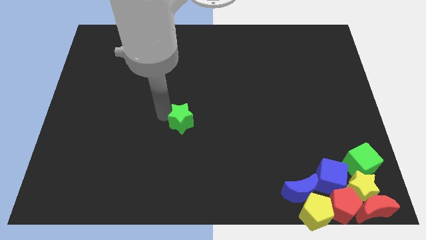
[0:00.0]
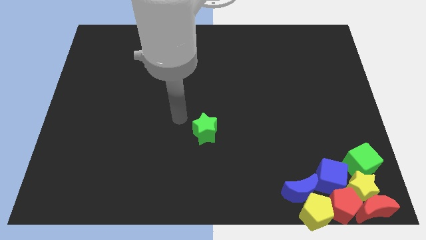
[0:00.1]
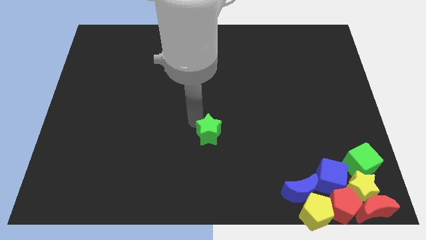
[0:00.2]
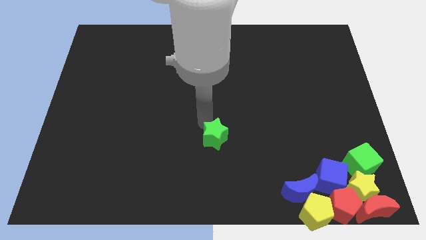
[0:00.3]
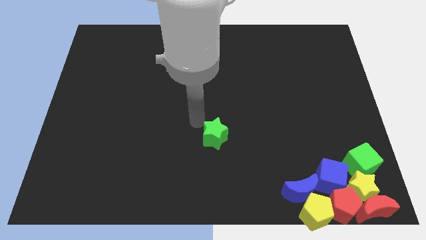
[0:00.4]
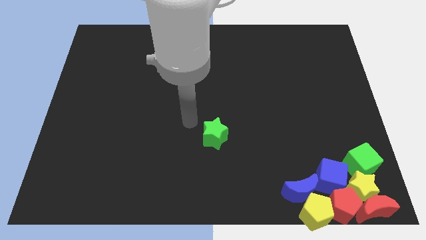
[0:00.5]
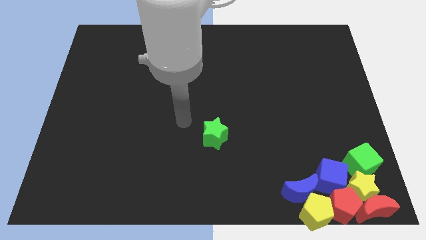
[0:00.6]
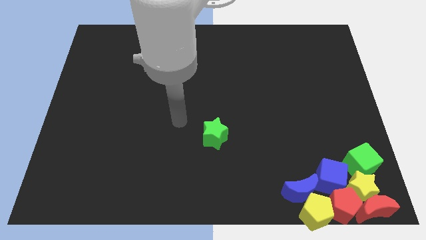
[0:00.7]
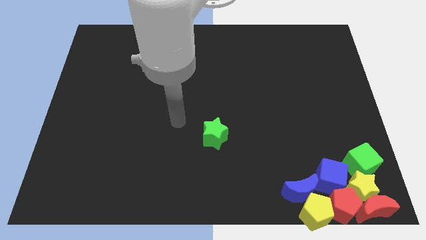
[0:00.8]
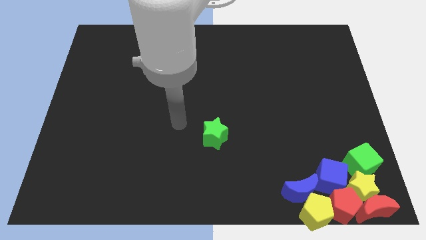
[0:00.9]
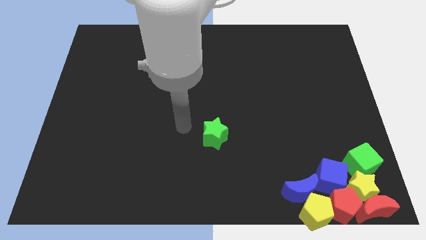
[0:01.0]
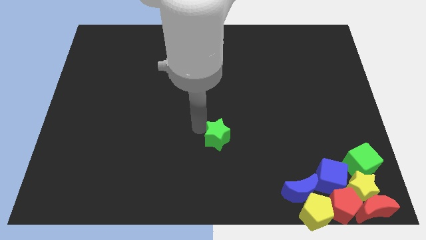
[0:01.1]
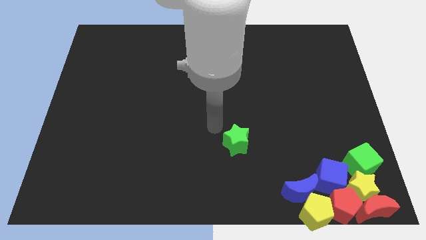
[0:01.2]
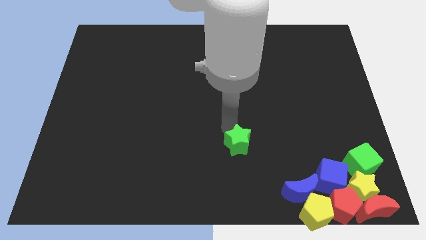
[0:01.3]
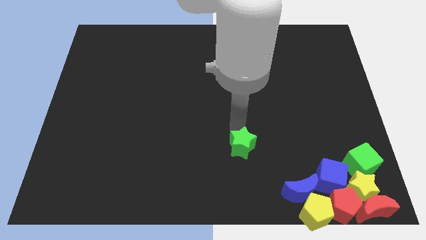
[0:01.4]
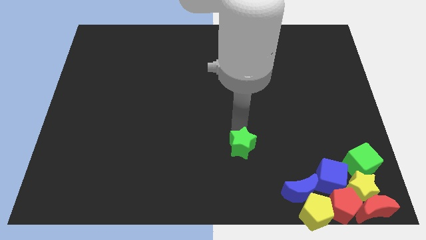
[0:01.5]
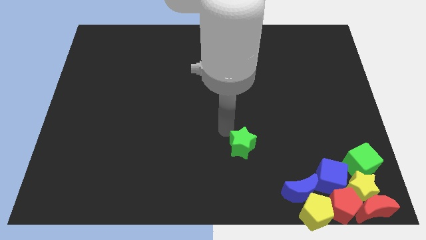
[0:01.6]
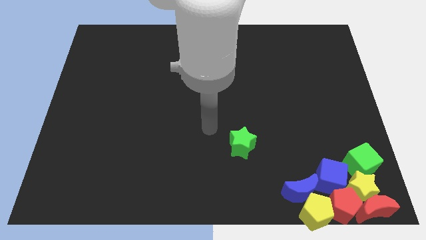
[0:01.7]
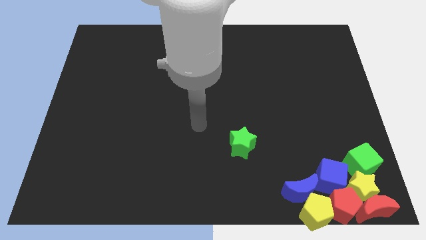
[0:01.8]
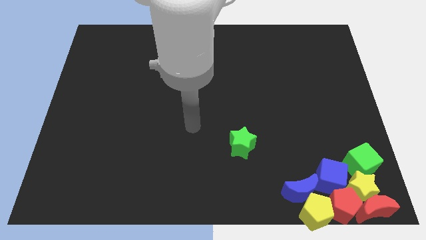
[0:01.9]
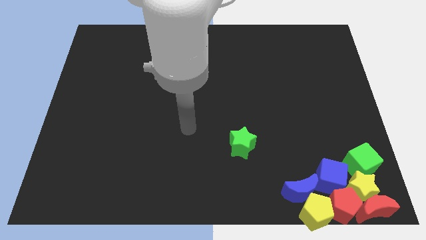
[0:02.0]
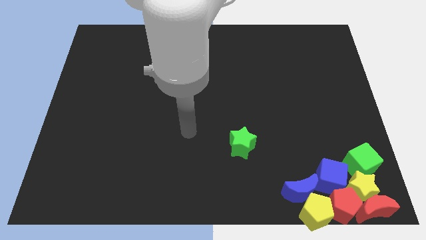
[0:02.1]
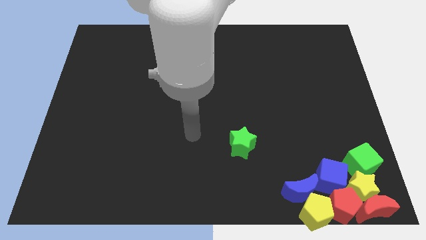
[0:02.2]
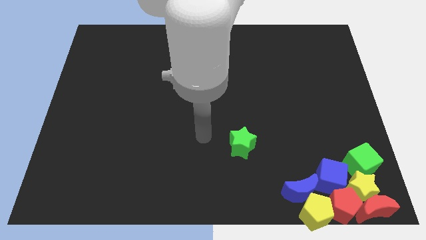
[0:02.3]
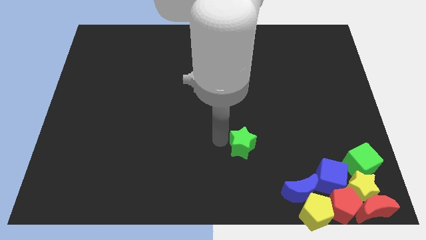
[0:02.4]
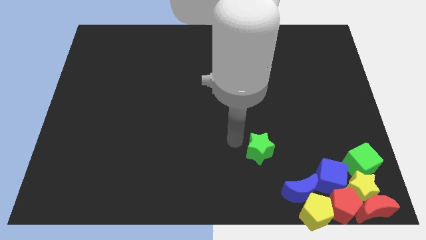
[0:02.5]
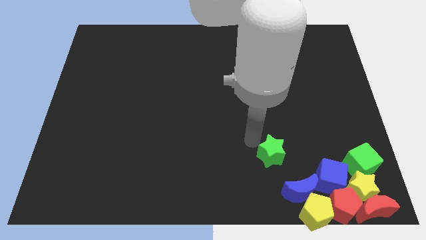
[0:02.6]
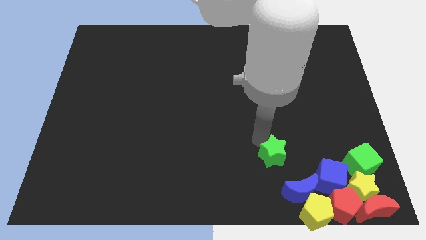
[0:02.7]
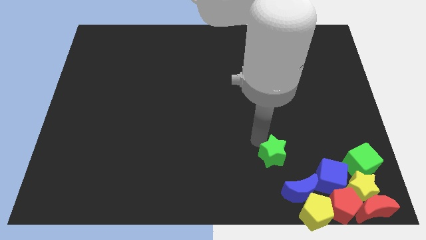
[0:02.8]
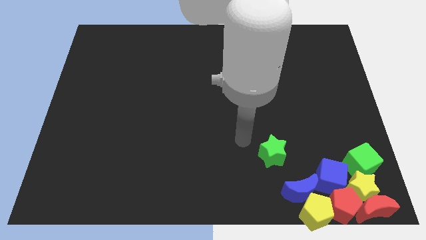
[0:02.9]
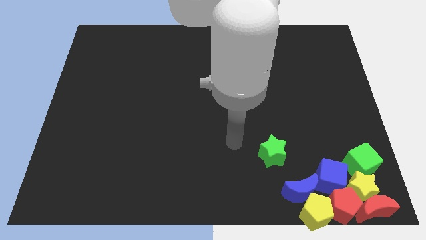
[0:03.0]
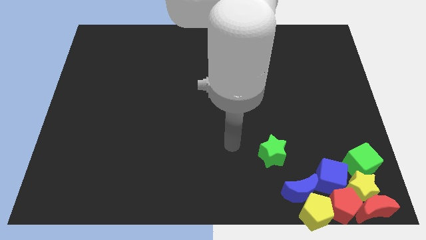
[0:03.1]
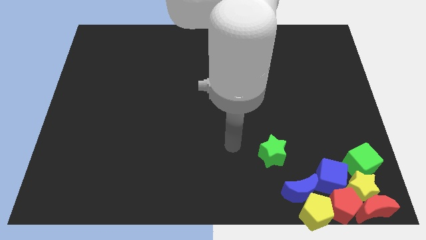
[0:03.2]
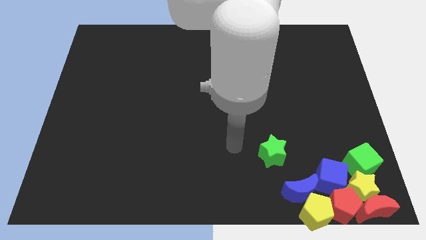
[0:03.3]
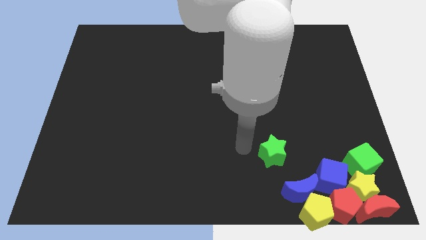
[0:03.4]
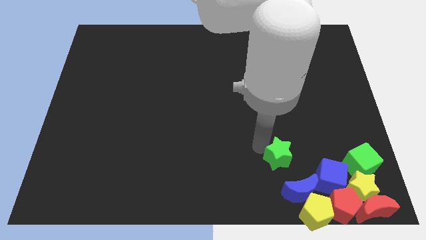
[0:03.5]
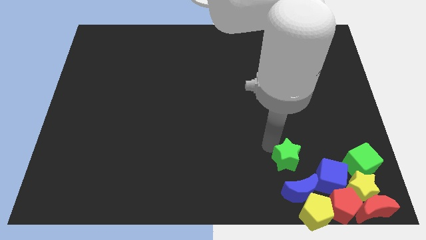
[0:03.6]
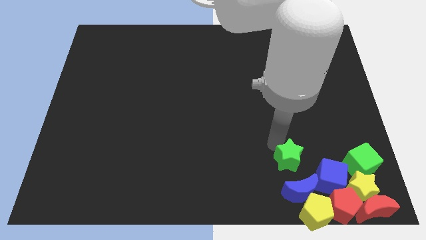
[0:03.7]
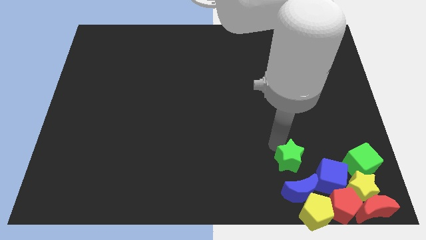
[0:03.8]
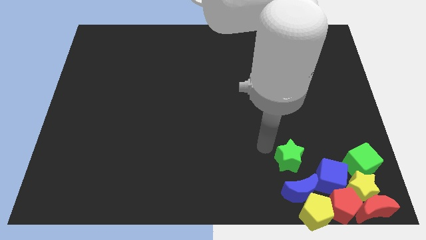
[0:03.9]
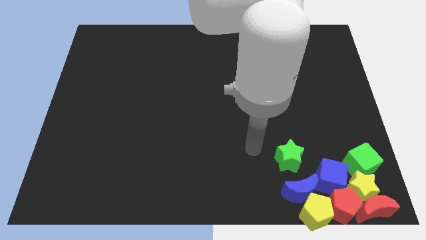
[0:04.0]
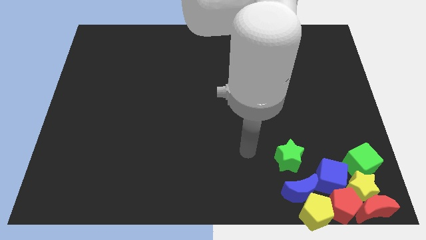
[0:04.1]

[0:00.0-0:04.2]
put the green star vertically above the blue moon

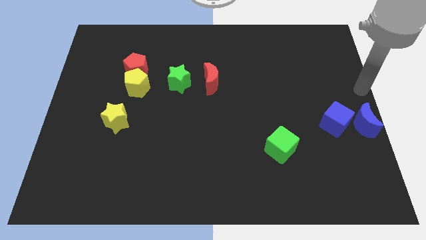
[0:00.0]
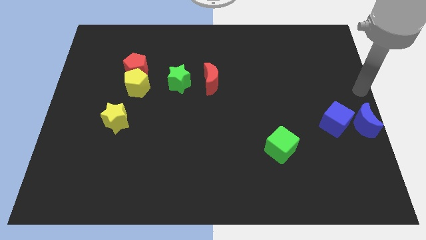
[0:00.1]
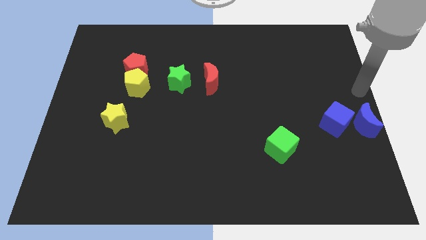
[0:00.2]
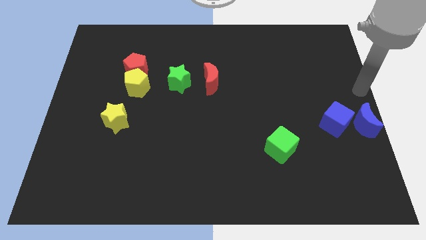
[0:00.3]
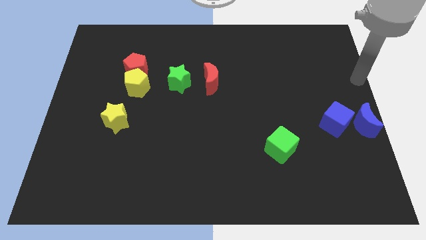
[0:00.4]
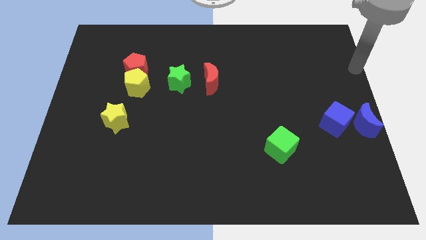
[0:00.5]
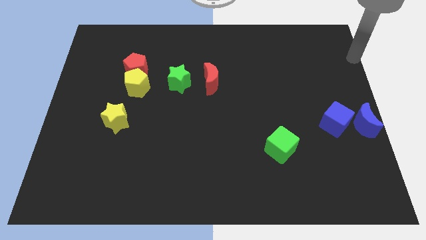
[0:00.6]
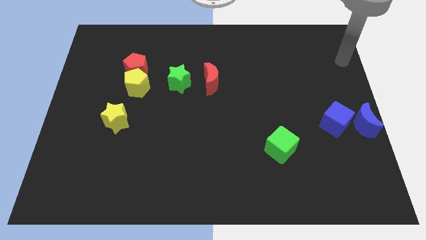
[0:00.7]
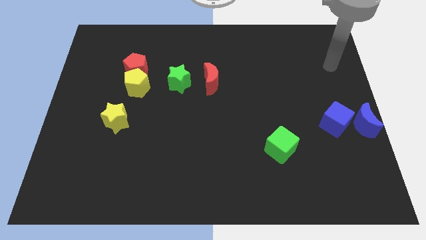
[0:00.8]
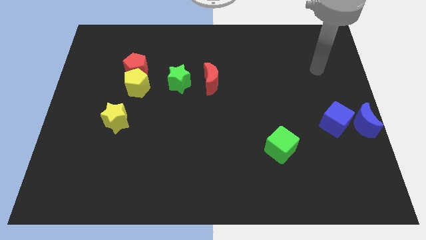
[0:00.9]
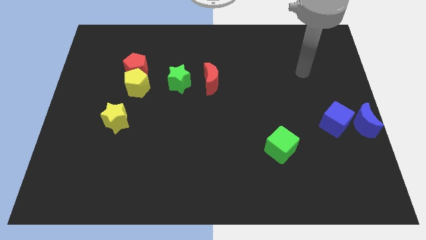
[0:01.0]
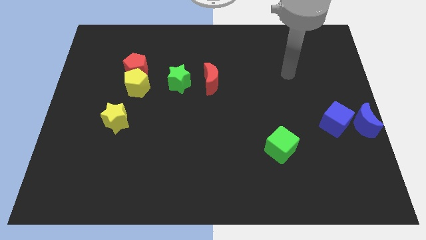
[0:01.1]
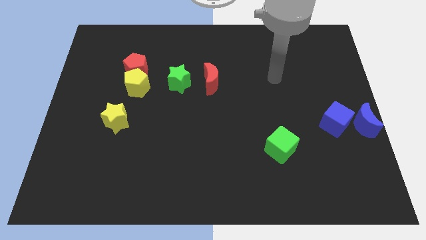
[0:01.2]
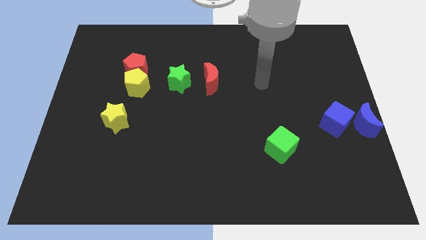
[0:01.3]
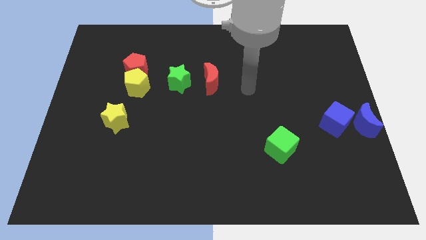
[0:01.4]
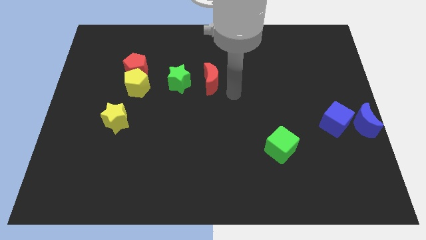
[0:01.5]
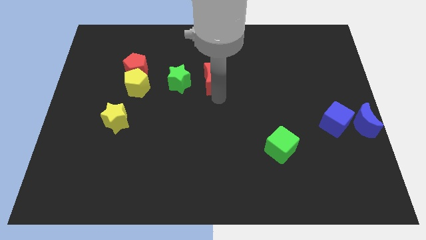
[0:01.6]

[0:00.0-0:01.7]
point the arm below the red moon

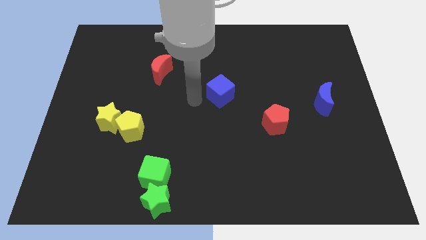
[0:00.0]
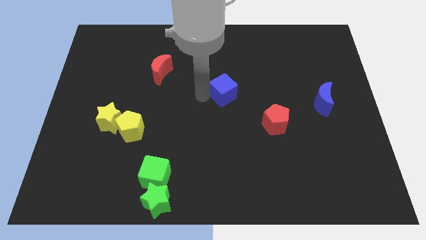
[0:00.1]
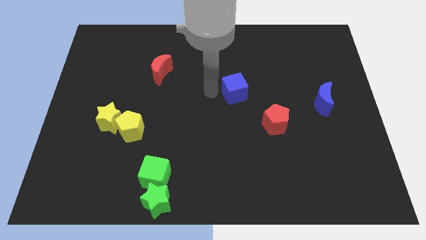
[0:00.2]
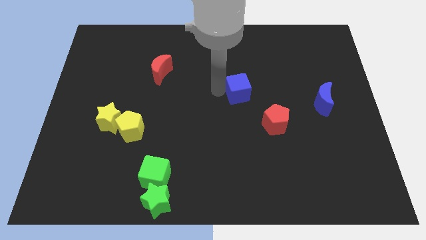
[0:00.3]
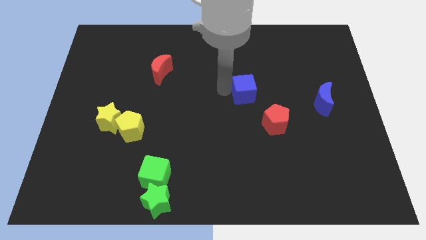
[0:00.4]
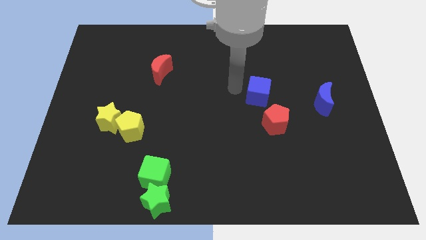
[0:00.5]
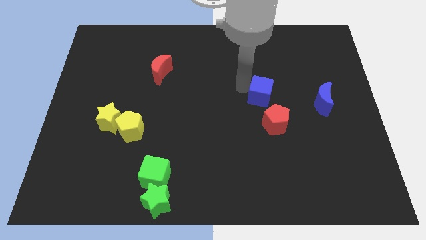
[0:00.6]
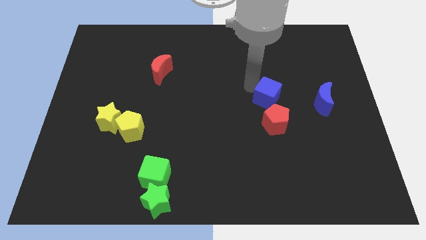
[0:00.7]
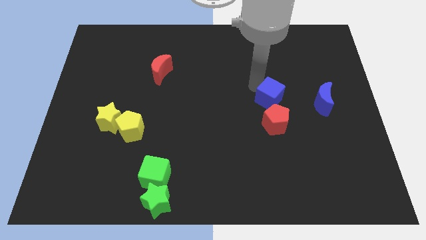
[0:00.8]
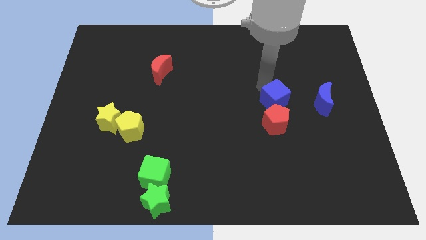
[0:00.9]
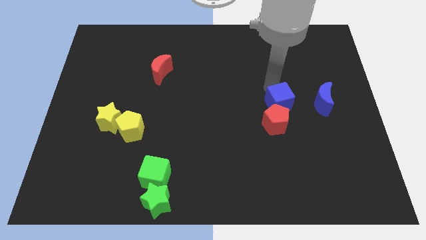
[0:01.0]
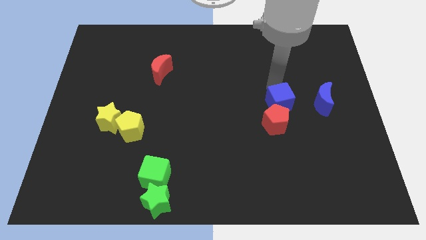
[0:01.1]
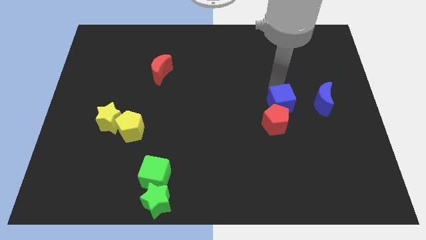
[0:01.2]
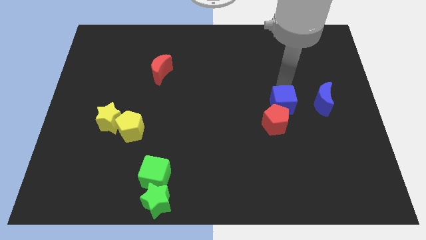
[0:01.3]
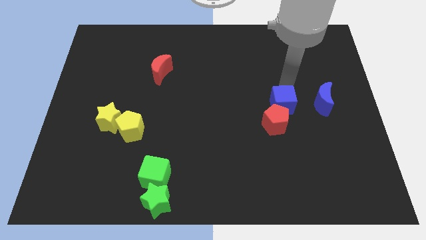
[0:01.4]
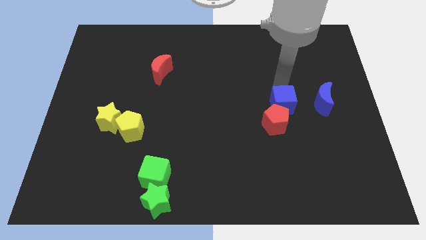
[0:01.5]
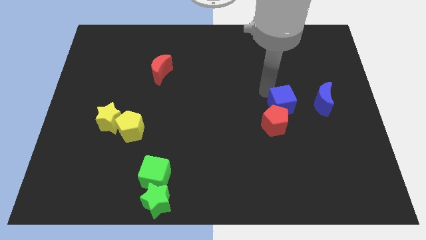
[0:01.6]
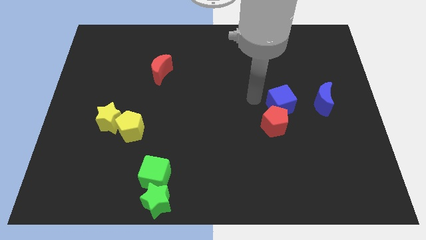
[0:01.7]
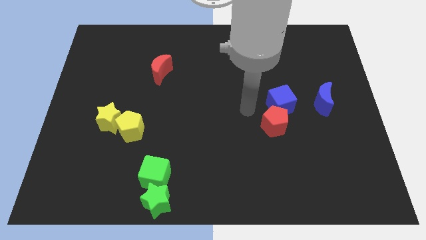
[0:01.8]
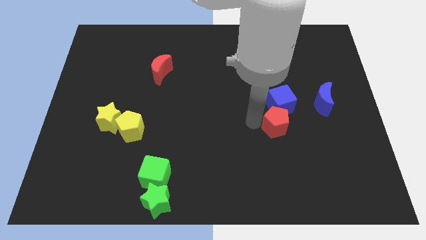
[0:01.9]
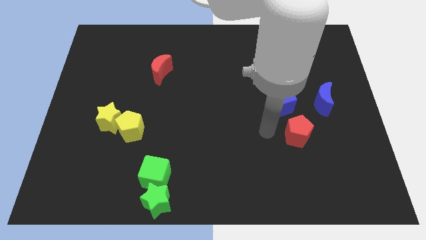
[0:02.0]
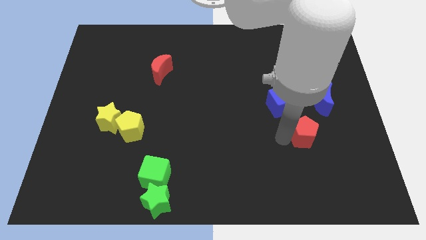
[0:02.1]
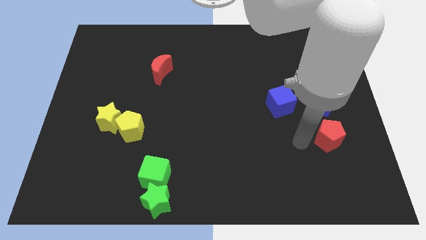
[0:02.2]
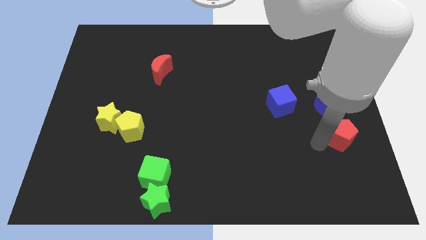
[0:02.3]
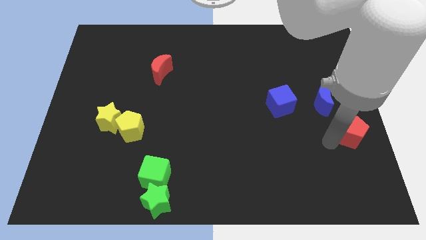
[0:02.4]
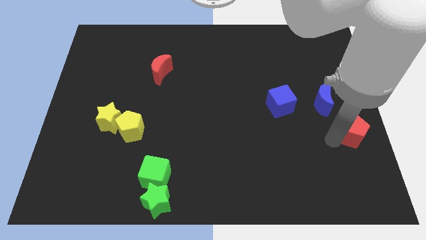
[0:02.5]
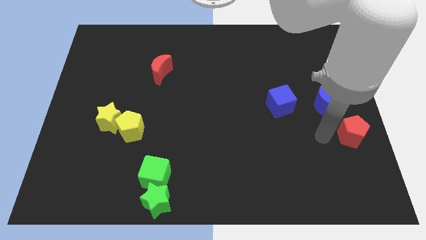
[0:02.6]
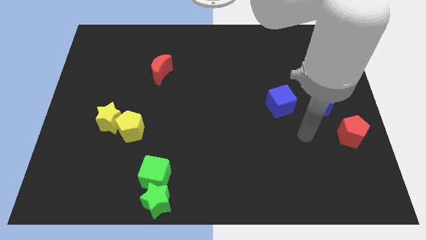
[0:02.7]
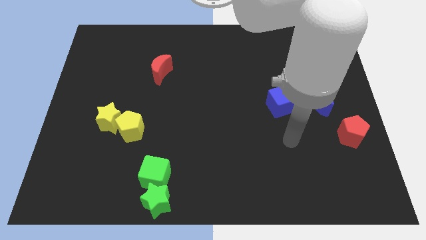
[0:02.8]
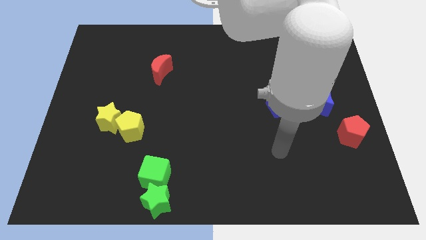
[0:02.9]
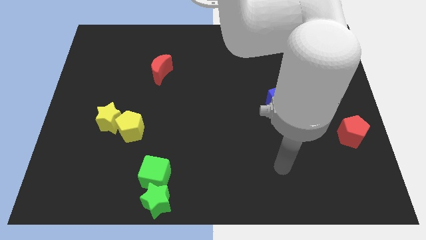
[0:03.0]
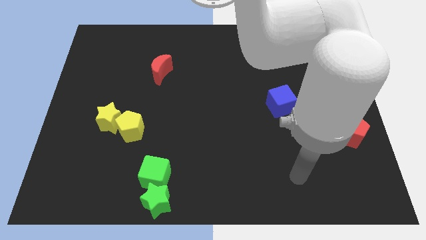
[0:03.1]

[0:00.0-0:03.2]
move the red pentagon to the bottom right of the blue moon

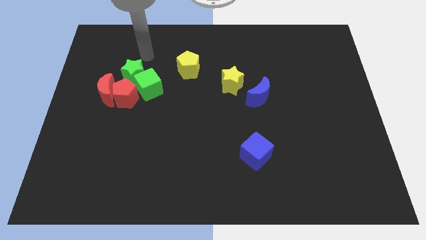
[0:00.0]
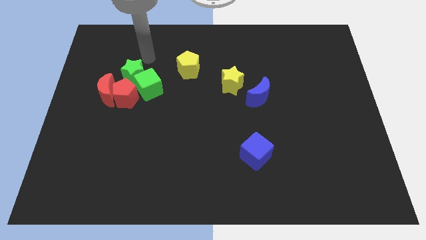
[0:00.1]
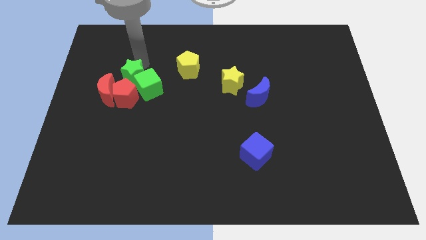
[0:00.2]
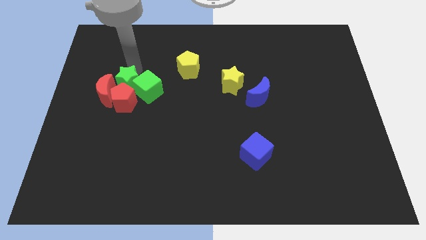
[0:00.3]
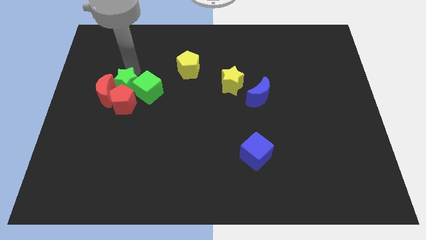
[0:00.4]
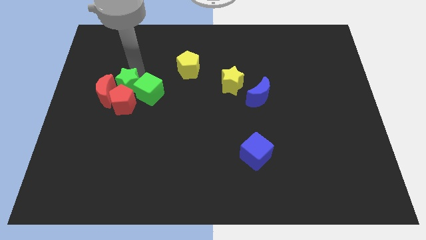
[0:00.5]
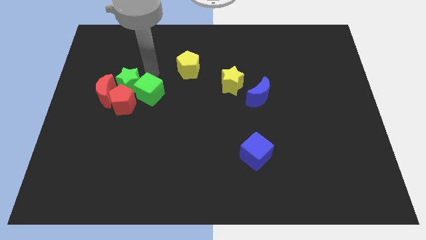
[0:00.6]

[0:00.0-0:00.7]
move the green star into the red crescent and red pentagon
